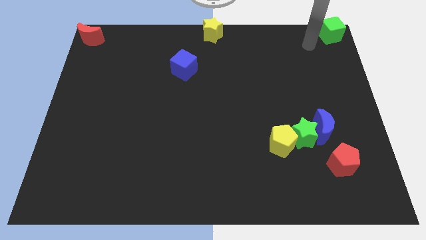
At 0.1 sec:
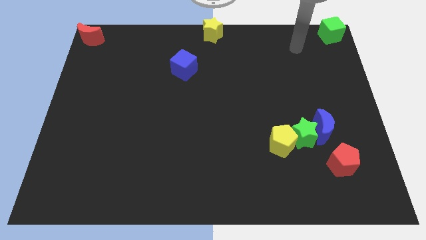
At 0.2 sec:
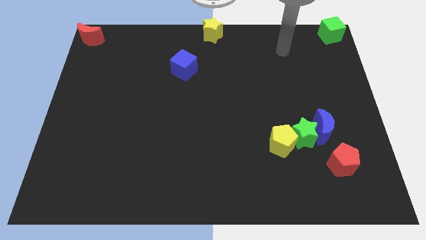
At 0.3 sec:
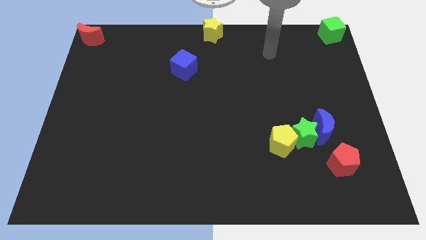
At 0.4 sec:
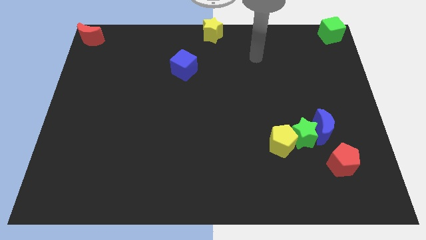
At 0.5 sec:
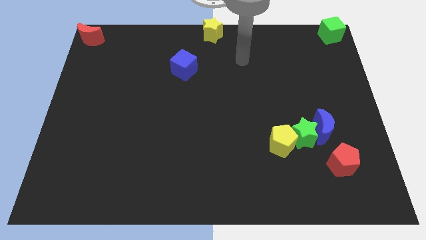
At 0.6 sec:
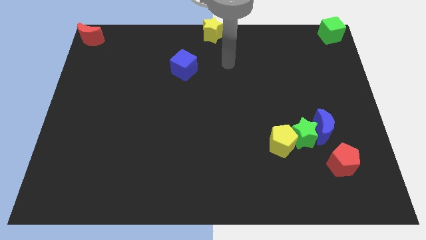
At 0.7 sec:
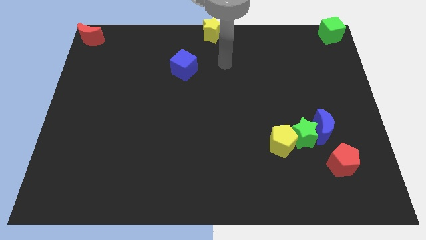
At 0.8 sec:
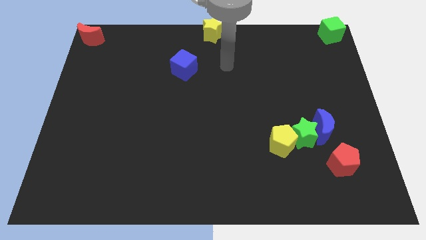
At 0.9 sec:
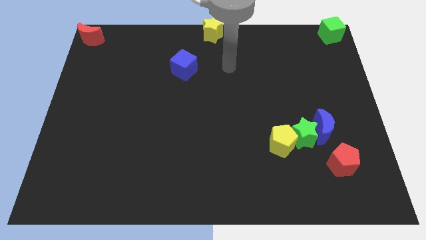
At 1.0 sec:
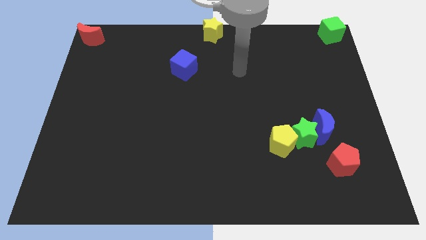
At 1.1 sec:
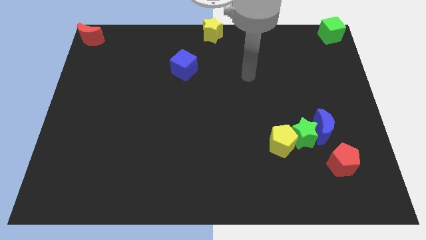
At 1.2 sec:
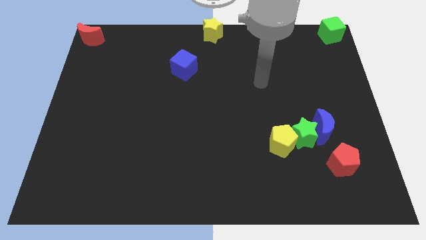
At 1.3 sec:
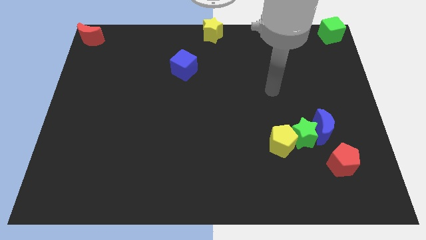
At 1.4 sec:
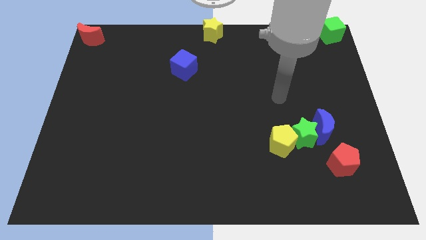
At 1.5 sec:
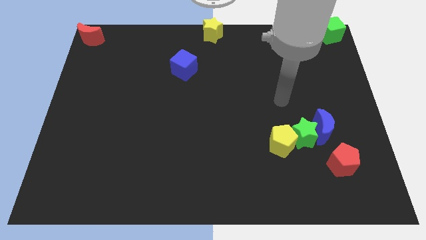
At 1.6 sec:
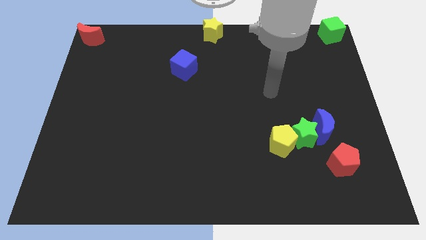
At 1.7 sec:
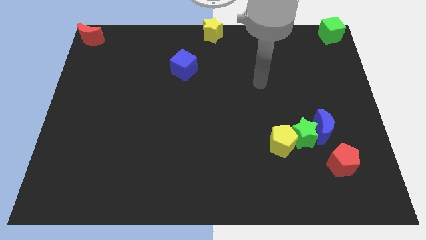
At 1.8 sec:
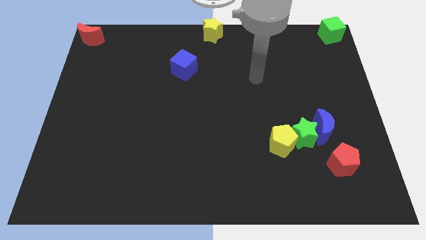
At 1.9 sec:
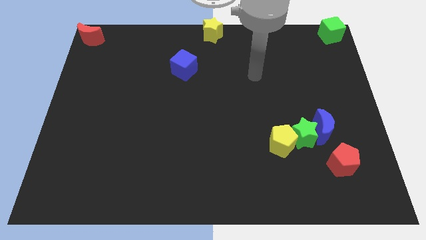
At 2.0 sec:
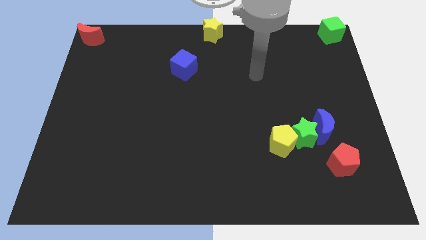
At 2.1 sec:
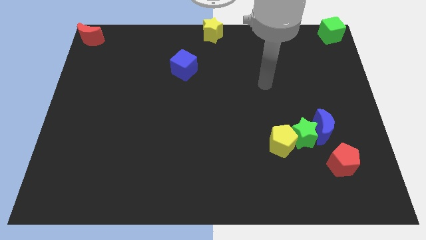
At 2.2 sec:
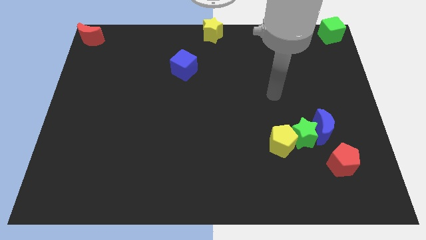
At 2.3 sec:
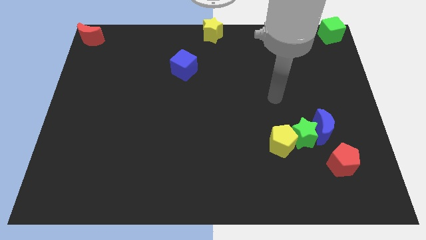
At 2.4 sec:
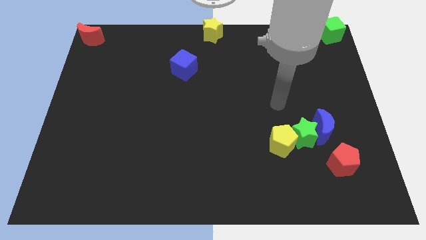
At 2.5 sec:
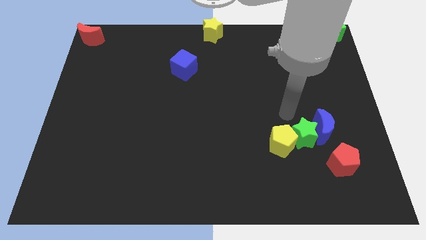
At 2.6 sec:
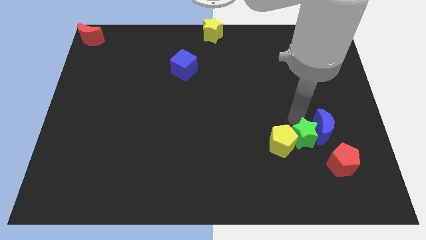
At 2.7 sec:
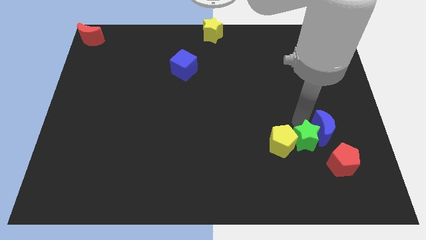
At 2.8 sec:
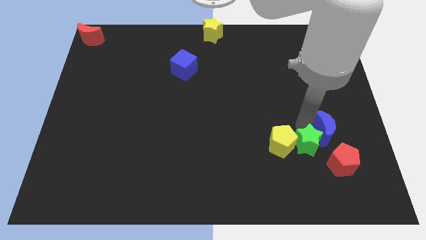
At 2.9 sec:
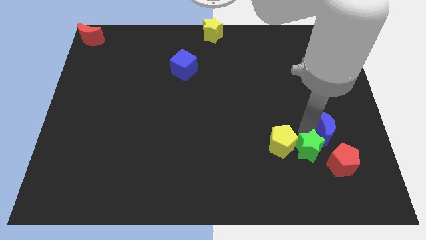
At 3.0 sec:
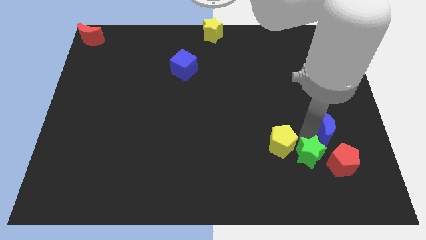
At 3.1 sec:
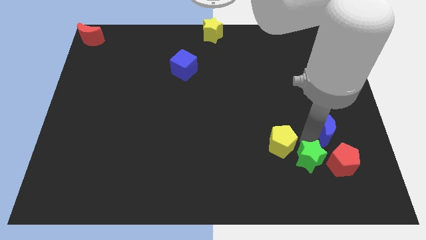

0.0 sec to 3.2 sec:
push the green star slightly to the bottom

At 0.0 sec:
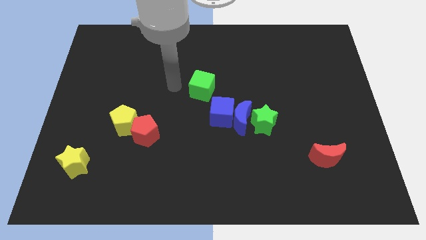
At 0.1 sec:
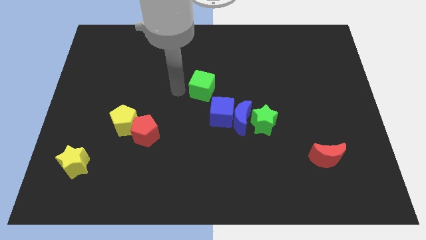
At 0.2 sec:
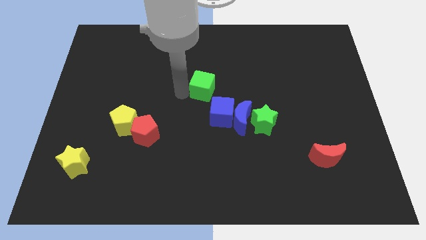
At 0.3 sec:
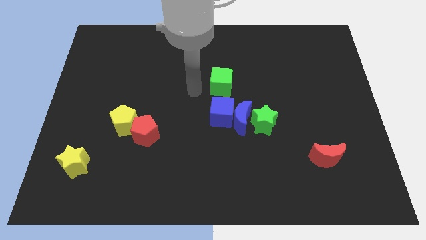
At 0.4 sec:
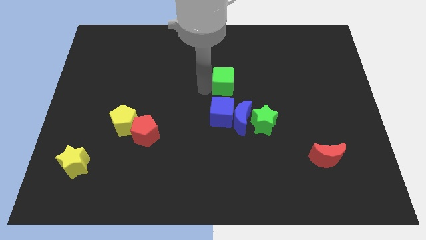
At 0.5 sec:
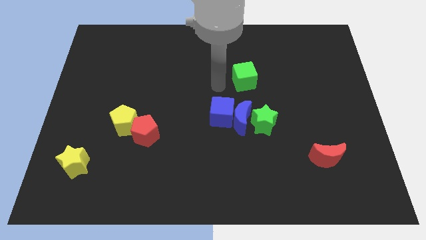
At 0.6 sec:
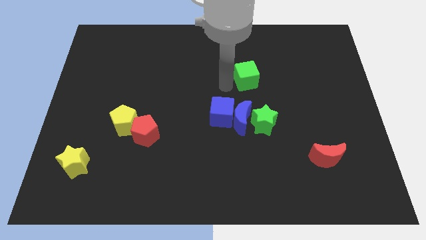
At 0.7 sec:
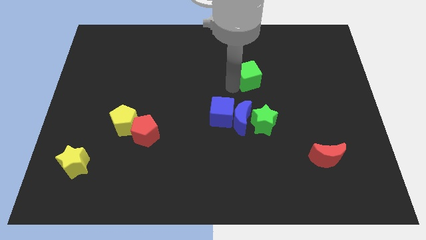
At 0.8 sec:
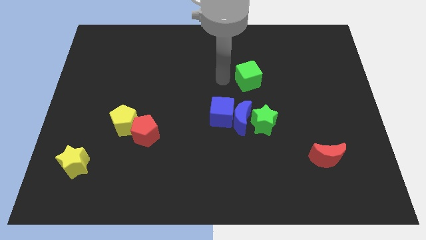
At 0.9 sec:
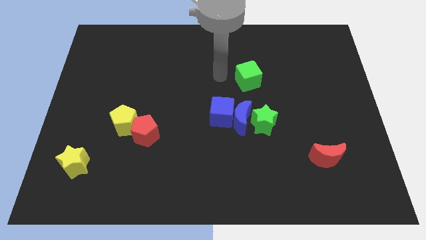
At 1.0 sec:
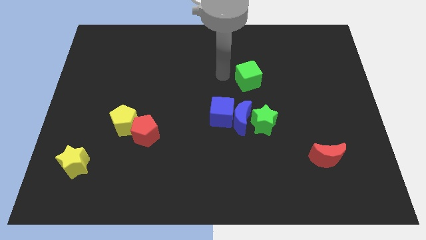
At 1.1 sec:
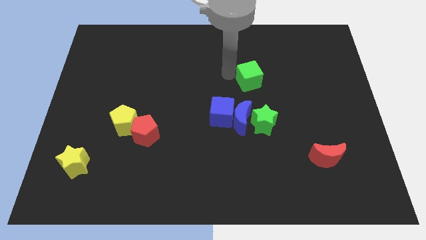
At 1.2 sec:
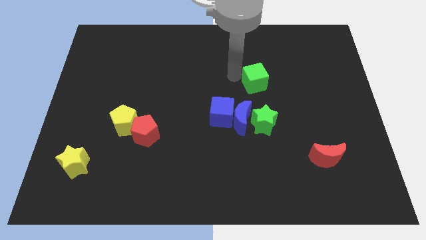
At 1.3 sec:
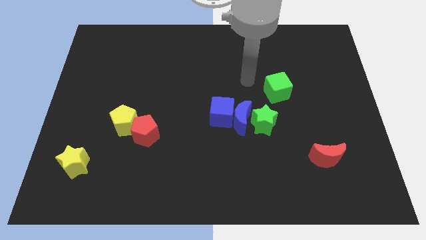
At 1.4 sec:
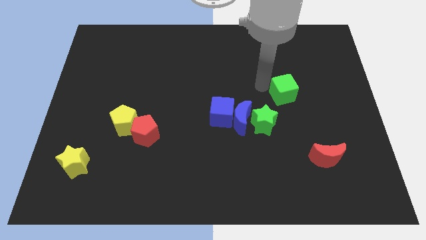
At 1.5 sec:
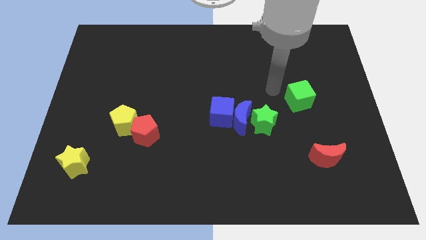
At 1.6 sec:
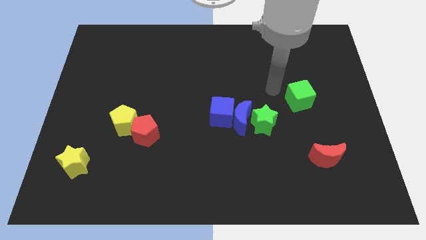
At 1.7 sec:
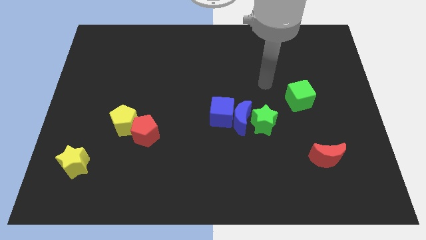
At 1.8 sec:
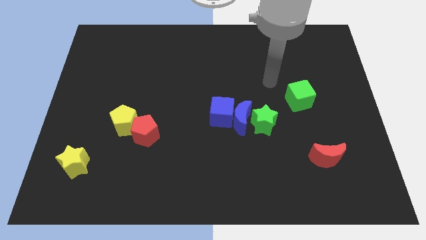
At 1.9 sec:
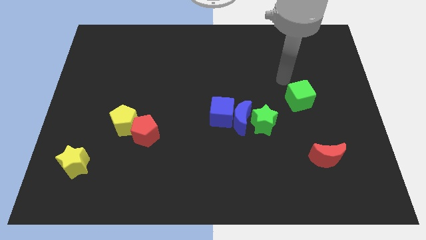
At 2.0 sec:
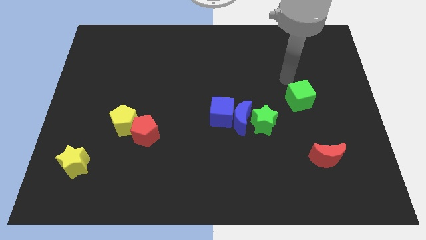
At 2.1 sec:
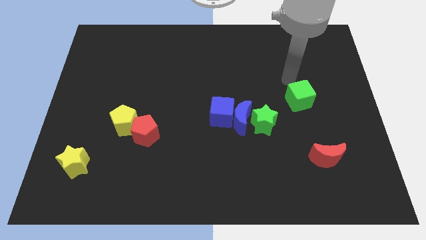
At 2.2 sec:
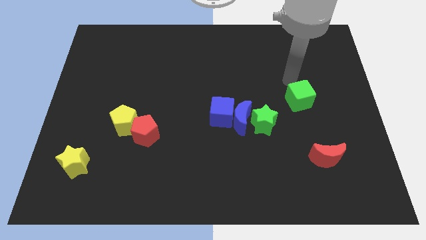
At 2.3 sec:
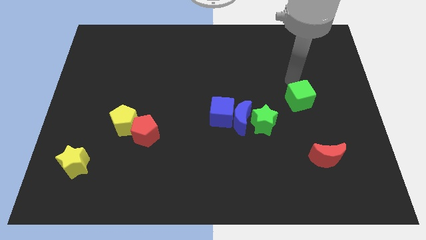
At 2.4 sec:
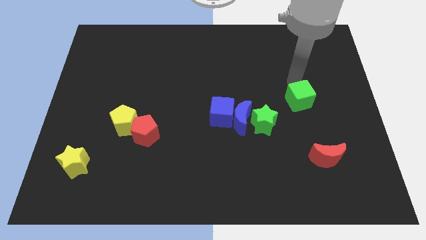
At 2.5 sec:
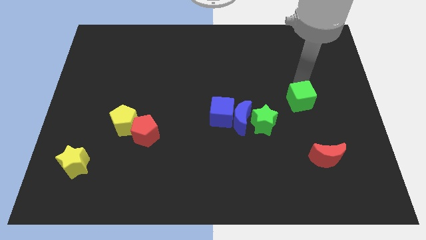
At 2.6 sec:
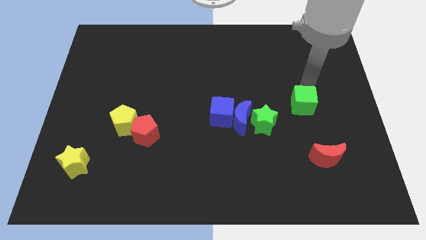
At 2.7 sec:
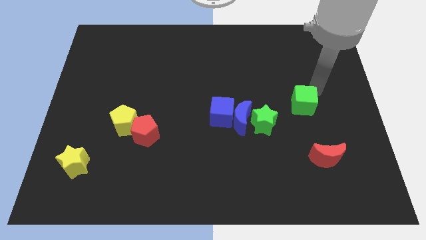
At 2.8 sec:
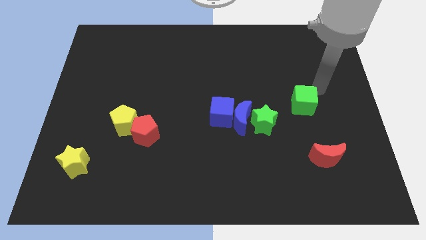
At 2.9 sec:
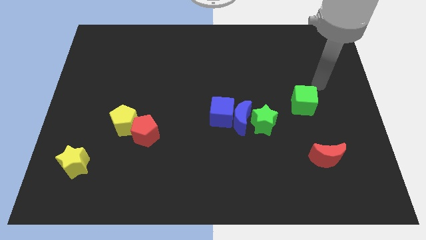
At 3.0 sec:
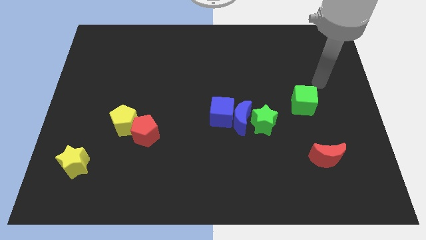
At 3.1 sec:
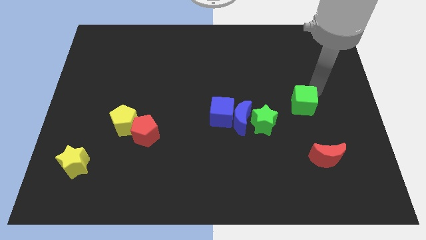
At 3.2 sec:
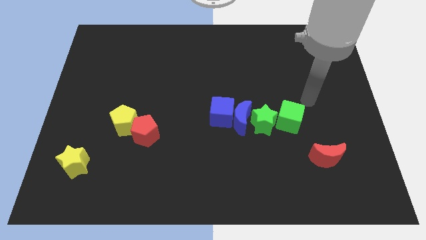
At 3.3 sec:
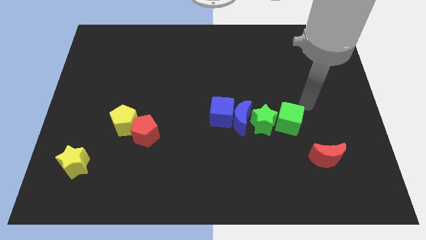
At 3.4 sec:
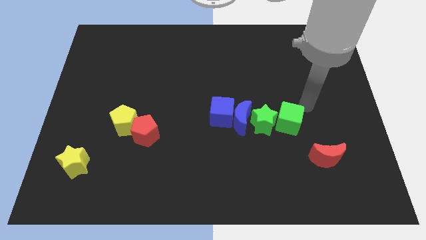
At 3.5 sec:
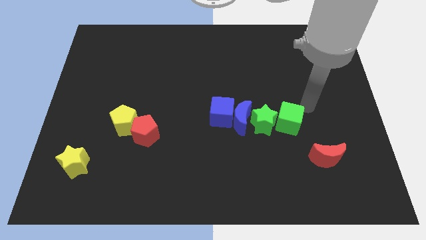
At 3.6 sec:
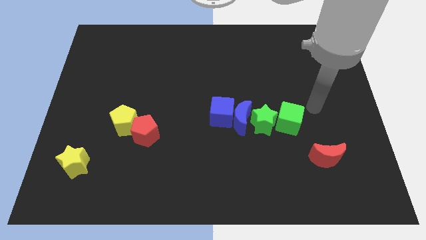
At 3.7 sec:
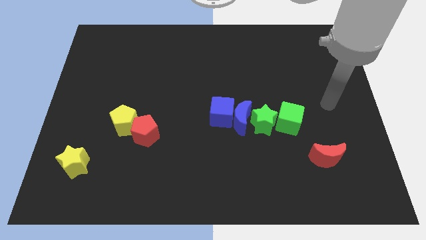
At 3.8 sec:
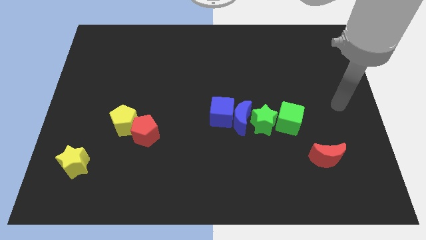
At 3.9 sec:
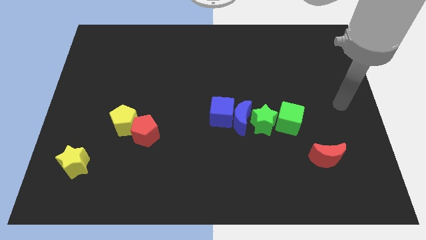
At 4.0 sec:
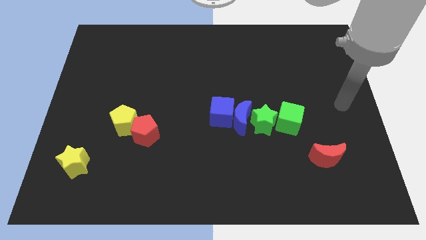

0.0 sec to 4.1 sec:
put the green cube on the right side of the green star

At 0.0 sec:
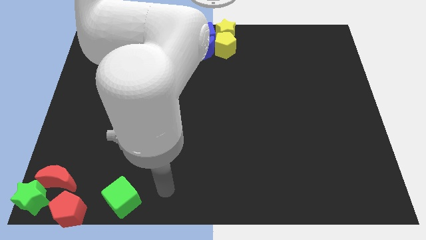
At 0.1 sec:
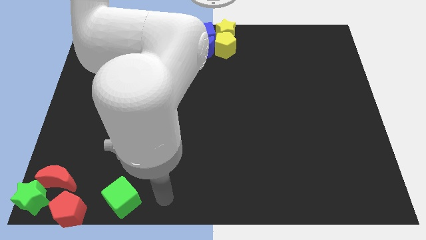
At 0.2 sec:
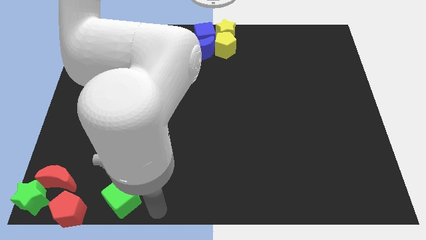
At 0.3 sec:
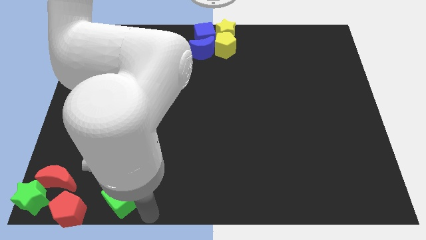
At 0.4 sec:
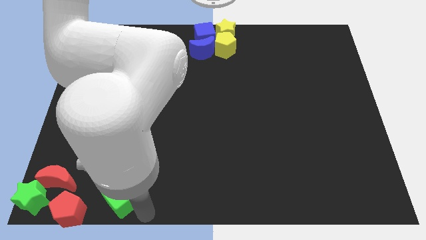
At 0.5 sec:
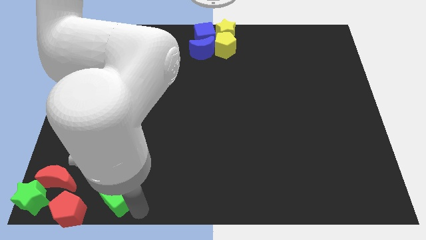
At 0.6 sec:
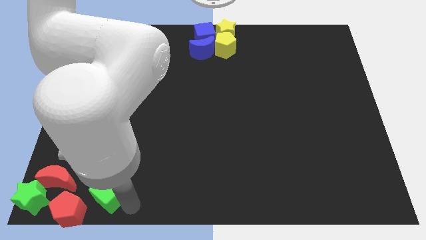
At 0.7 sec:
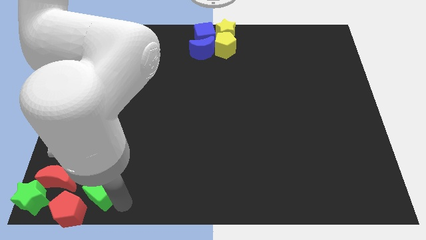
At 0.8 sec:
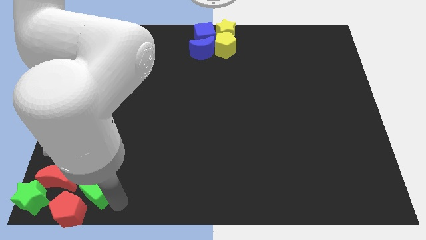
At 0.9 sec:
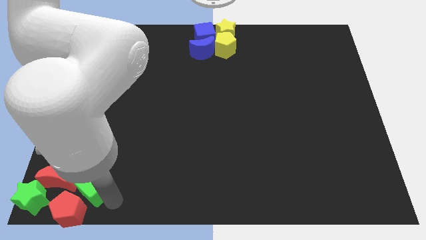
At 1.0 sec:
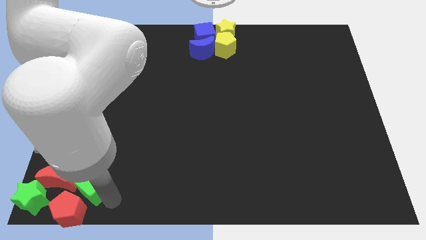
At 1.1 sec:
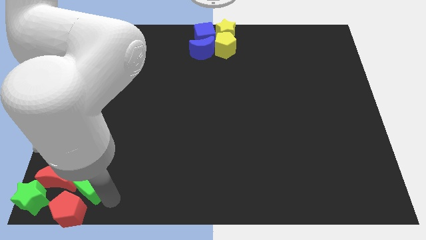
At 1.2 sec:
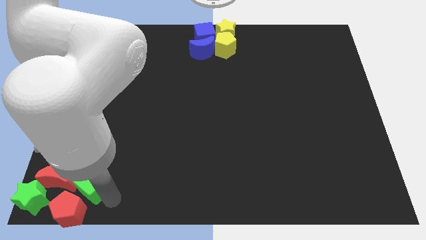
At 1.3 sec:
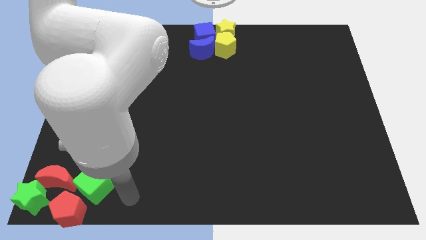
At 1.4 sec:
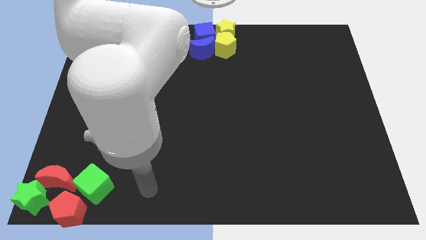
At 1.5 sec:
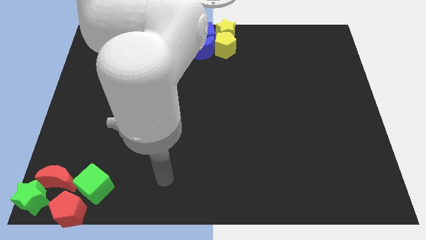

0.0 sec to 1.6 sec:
push the green cube into the group of blocks which are at the bottom left side corner
